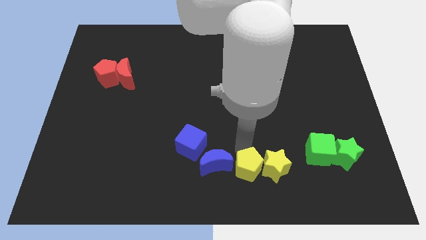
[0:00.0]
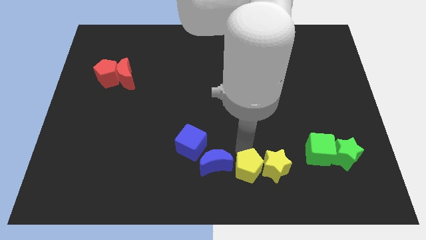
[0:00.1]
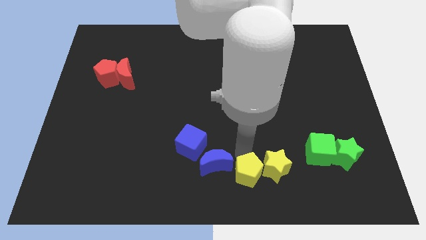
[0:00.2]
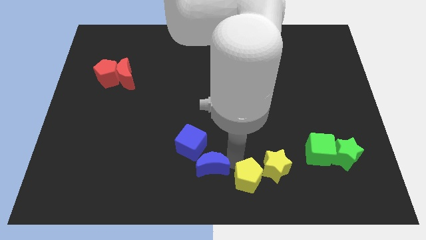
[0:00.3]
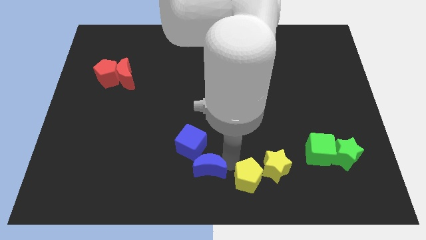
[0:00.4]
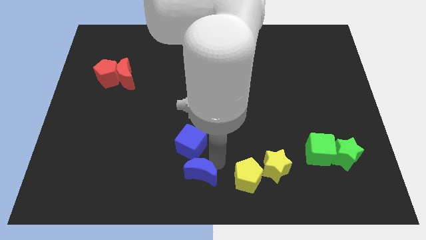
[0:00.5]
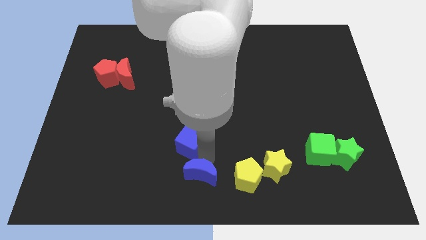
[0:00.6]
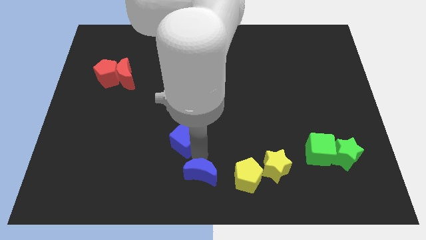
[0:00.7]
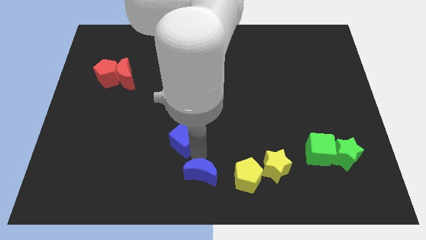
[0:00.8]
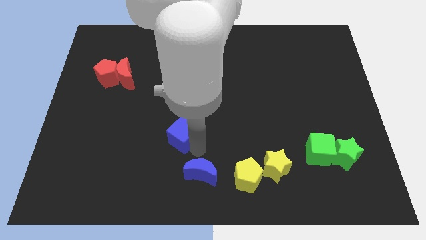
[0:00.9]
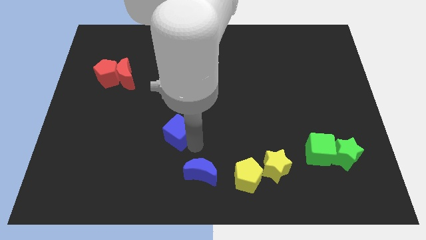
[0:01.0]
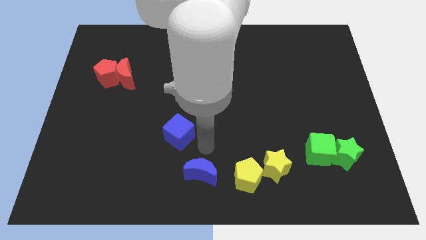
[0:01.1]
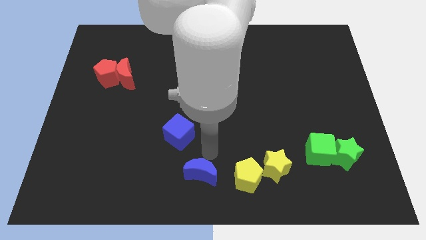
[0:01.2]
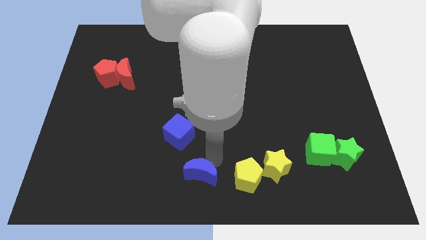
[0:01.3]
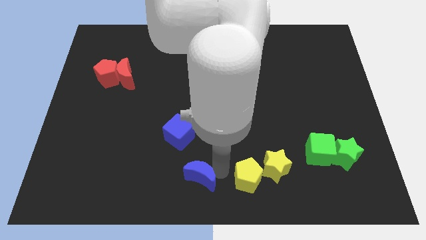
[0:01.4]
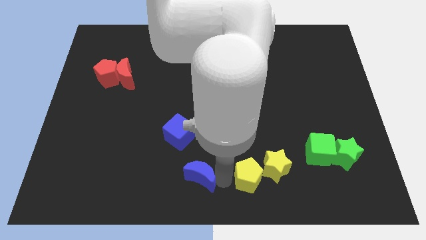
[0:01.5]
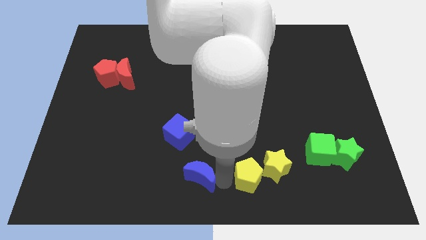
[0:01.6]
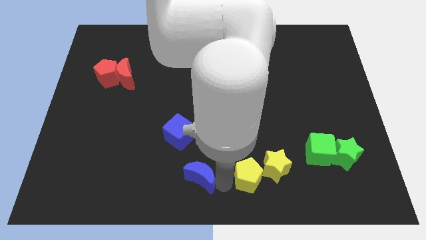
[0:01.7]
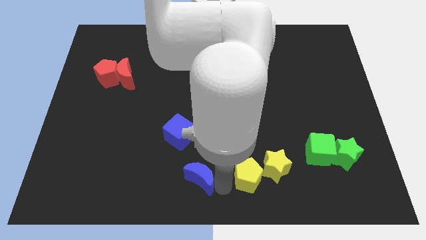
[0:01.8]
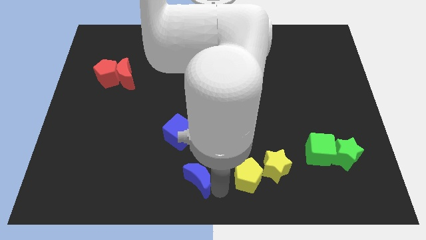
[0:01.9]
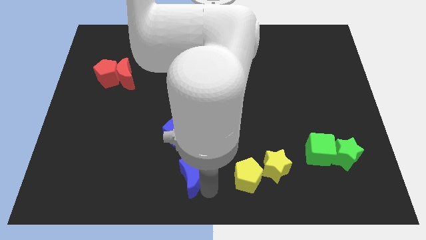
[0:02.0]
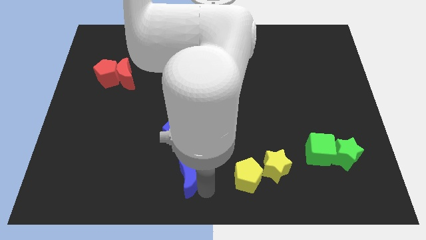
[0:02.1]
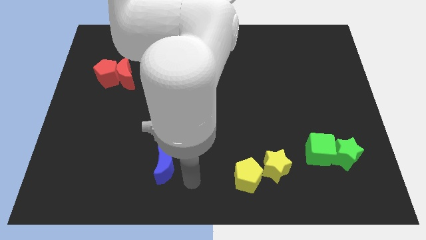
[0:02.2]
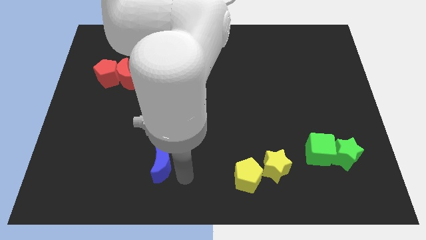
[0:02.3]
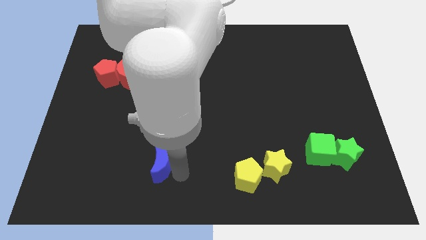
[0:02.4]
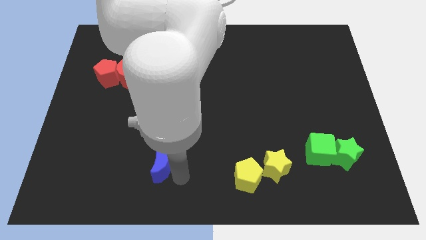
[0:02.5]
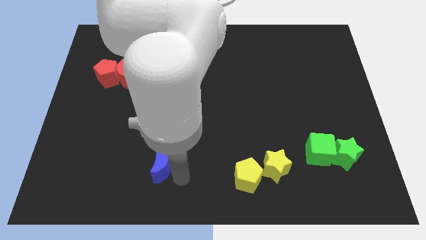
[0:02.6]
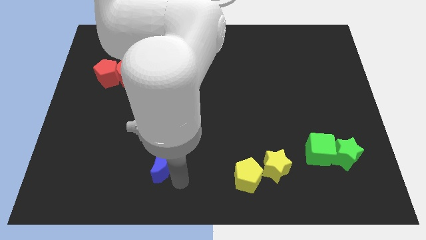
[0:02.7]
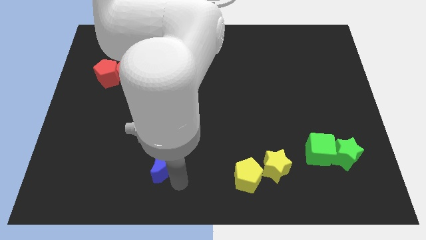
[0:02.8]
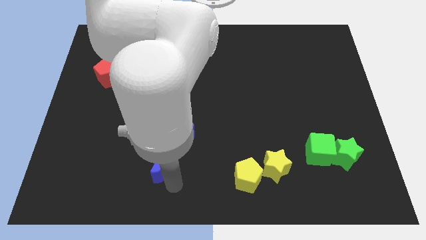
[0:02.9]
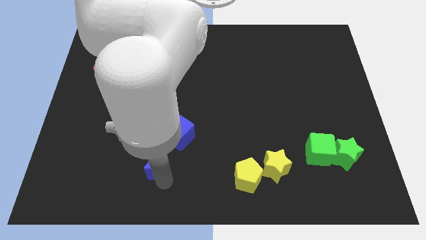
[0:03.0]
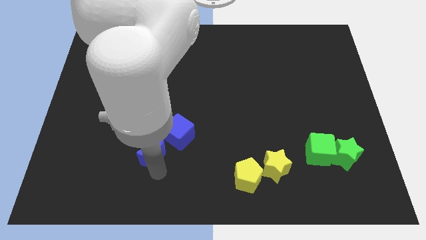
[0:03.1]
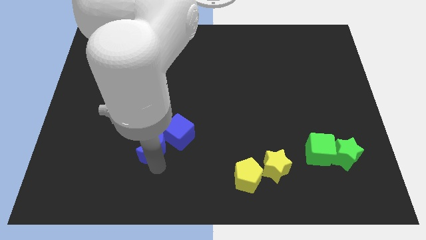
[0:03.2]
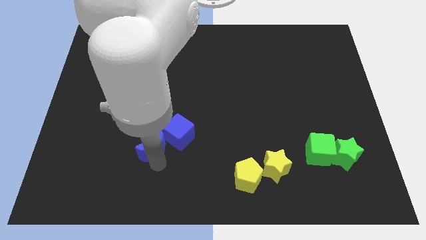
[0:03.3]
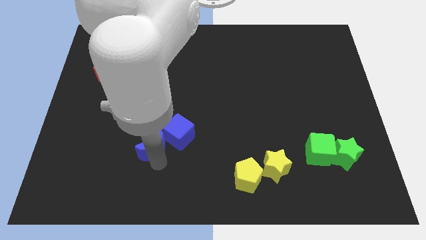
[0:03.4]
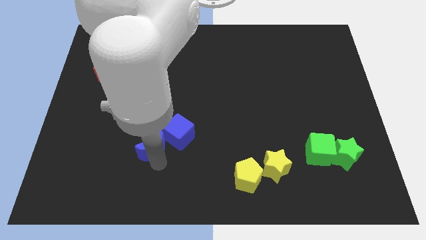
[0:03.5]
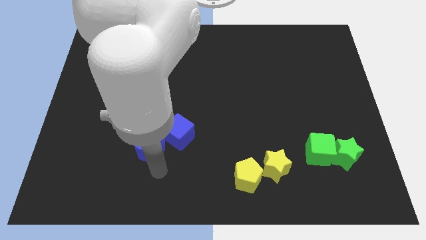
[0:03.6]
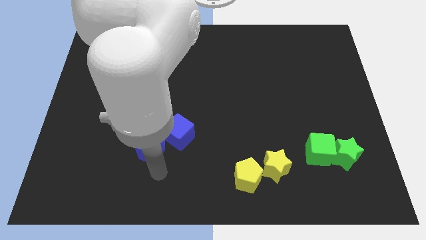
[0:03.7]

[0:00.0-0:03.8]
move the blue crescent to the bottom left of the blue cube

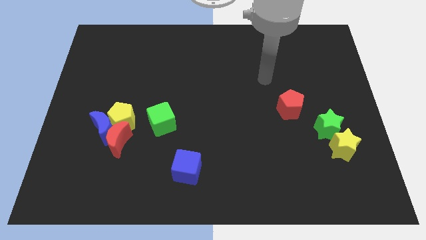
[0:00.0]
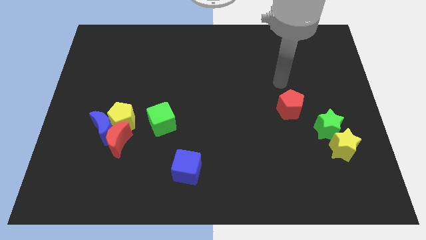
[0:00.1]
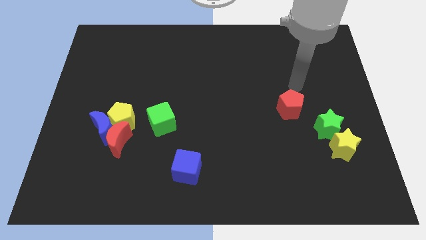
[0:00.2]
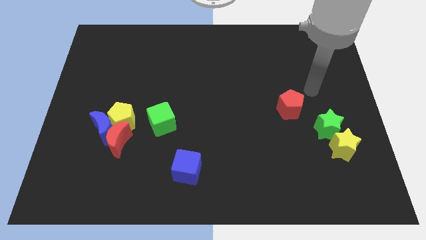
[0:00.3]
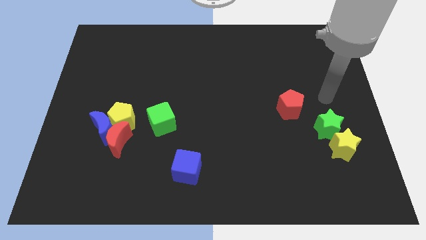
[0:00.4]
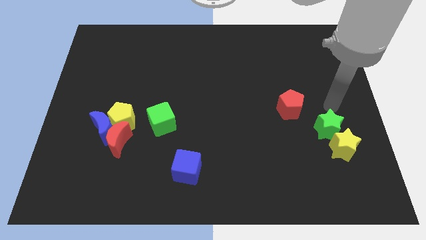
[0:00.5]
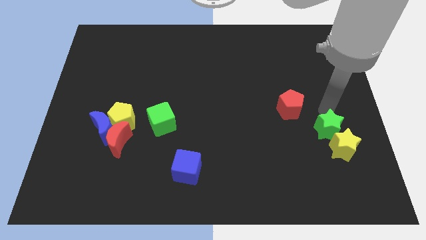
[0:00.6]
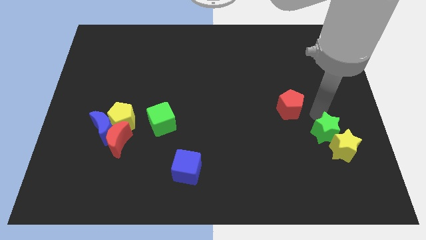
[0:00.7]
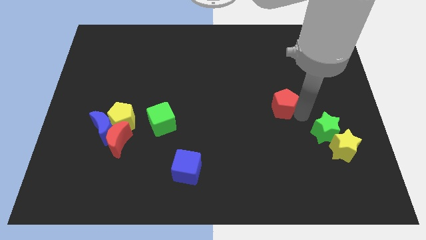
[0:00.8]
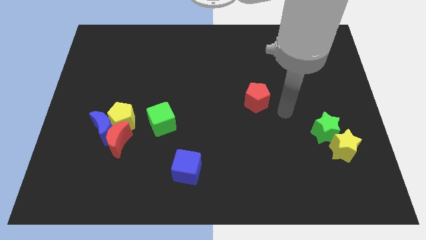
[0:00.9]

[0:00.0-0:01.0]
move your arm towards the red pentagon

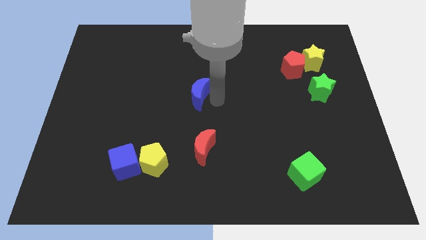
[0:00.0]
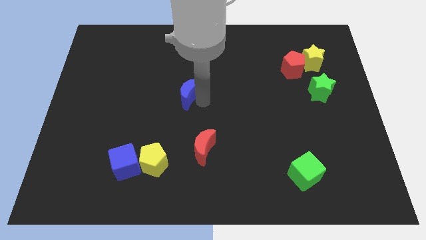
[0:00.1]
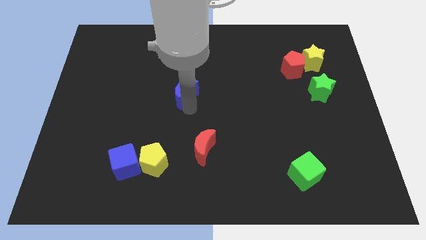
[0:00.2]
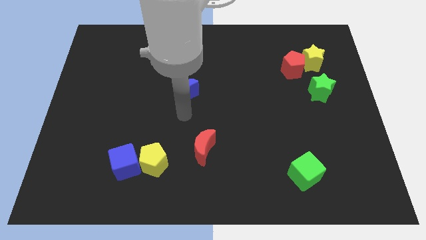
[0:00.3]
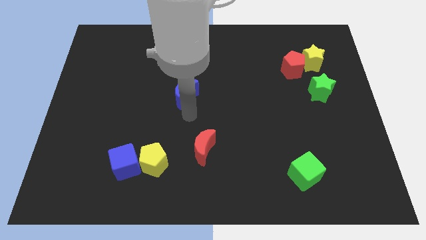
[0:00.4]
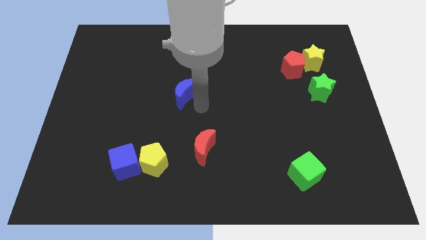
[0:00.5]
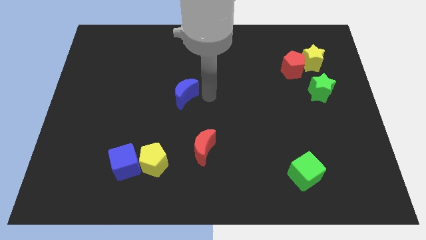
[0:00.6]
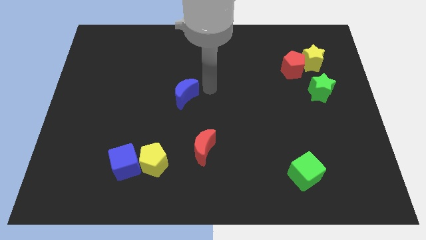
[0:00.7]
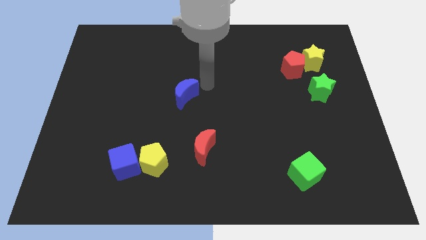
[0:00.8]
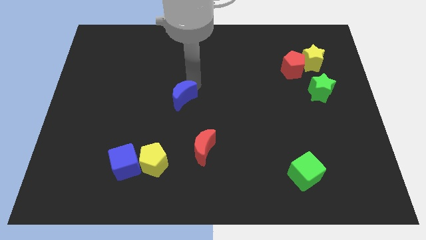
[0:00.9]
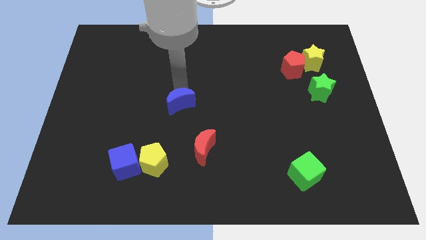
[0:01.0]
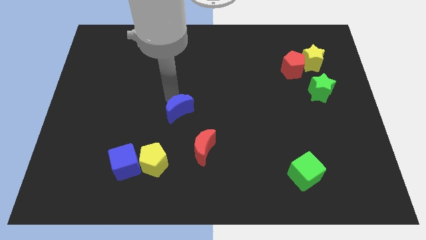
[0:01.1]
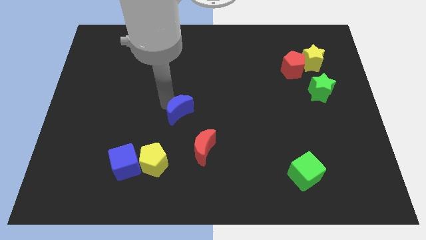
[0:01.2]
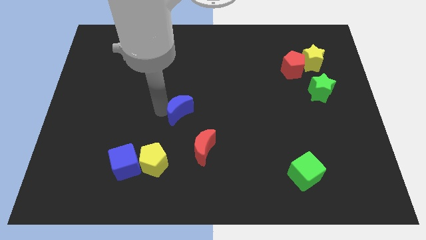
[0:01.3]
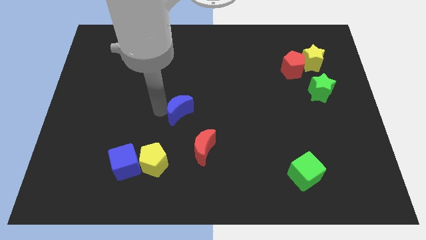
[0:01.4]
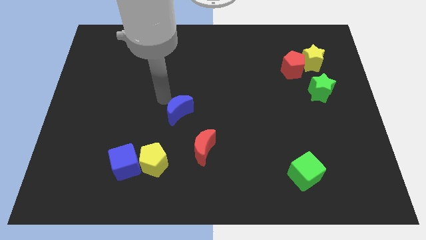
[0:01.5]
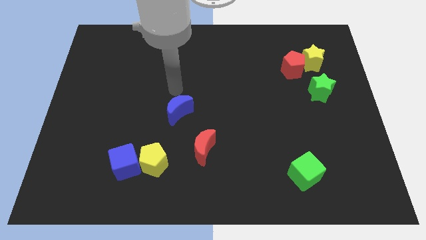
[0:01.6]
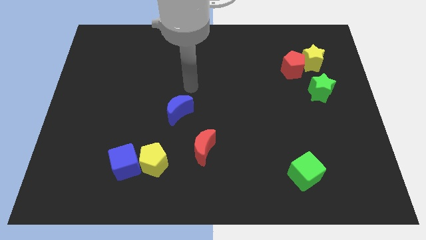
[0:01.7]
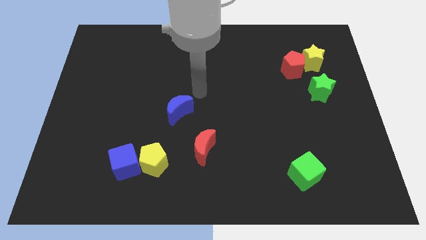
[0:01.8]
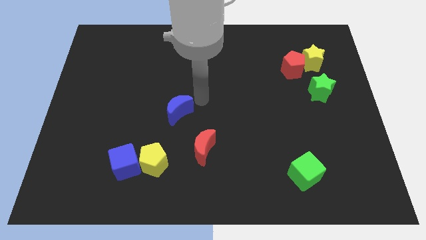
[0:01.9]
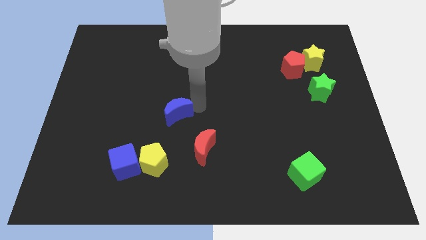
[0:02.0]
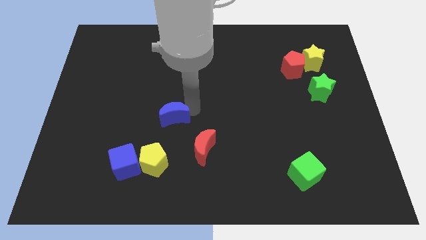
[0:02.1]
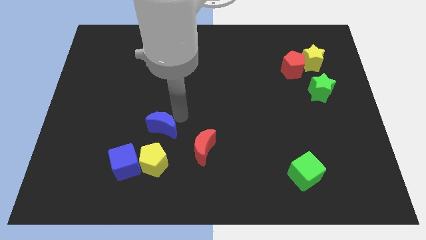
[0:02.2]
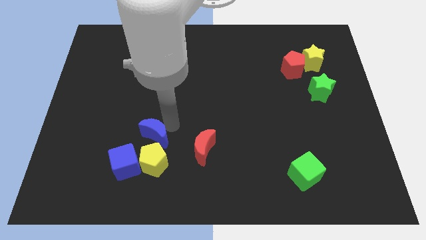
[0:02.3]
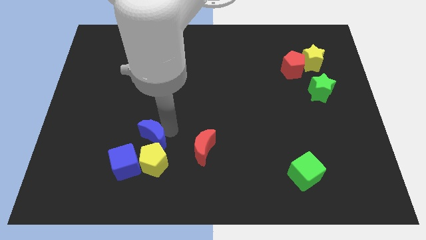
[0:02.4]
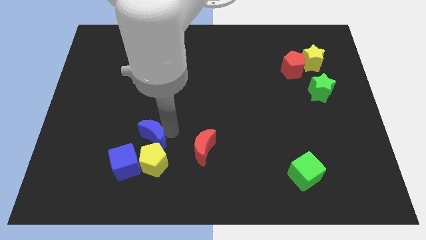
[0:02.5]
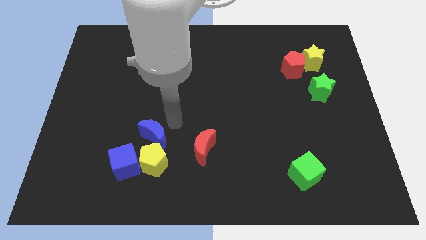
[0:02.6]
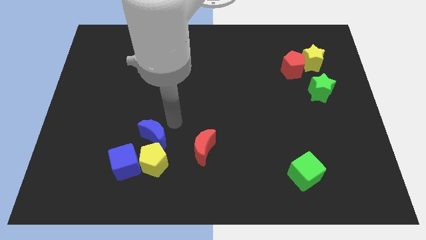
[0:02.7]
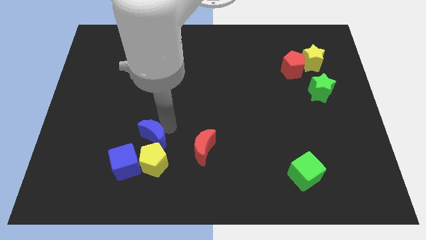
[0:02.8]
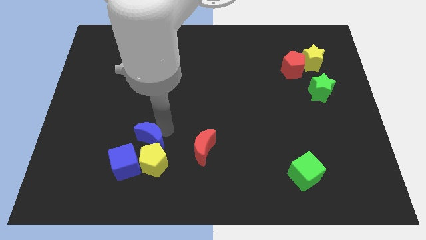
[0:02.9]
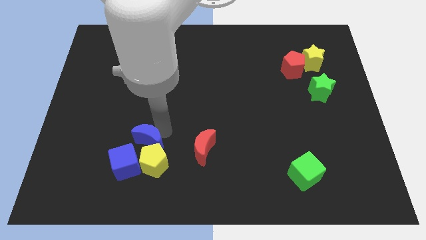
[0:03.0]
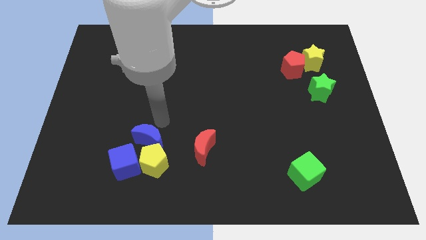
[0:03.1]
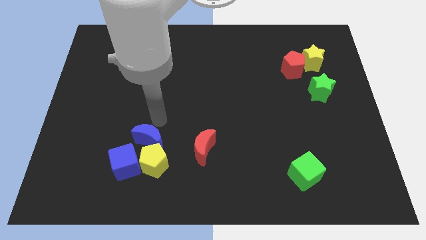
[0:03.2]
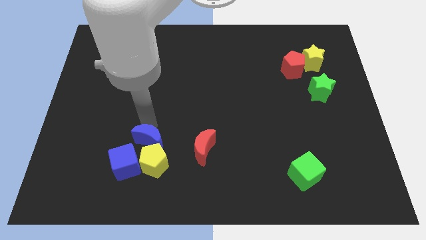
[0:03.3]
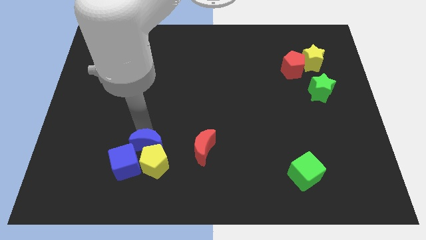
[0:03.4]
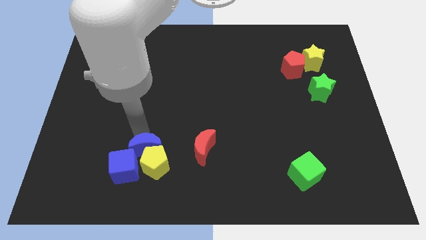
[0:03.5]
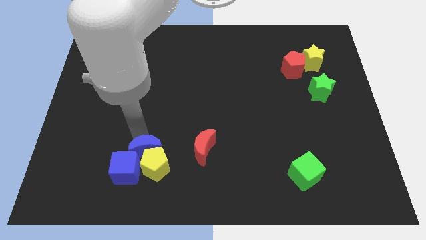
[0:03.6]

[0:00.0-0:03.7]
drag the blue crescent into the top side of the group of blocks

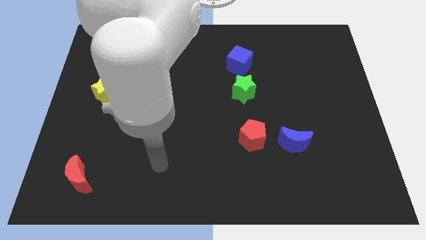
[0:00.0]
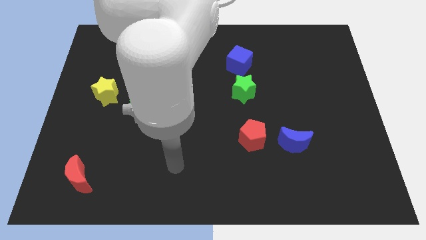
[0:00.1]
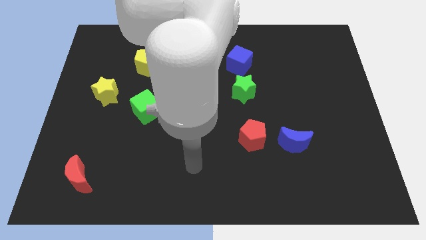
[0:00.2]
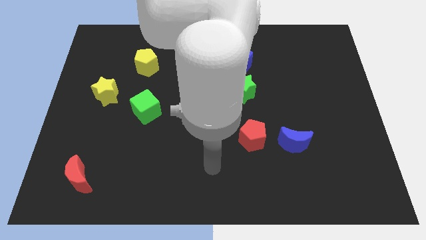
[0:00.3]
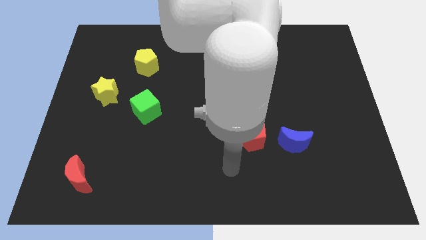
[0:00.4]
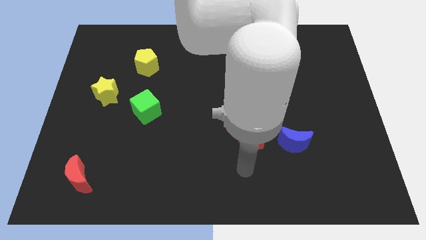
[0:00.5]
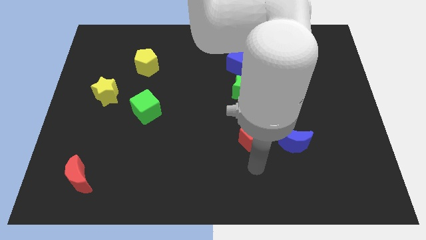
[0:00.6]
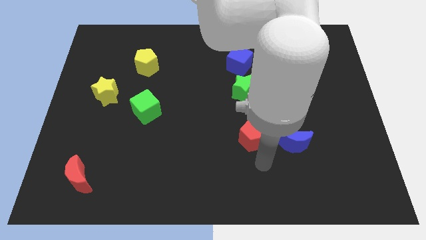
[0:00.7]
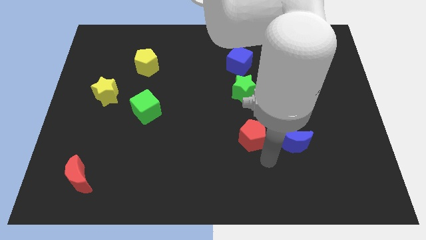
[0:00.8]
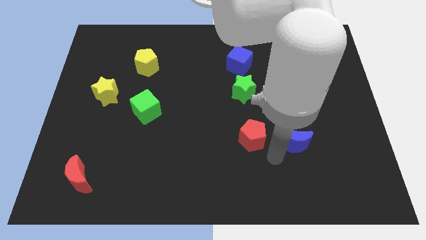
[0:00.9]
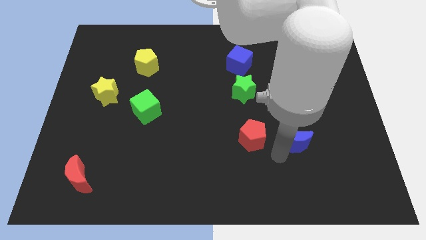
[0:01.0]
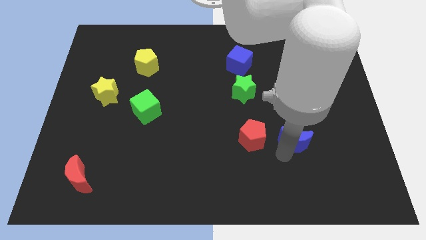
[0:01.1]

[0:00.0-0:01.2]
point your arm at the bottom of blue moon
